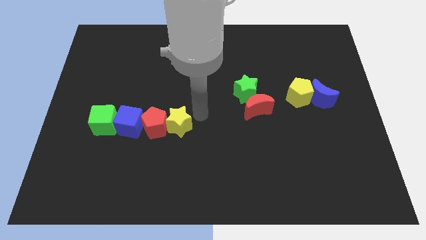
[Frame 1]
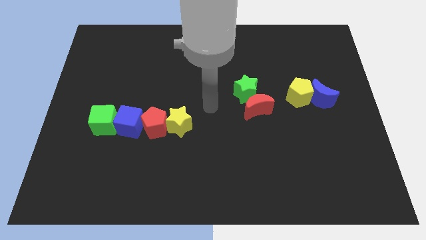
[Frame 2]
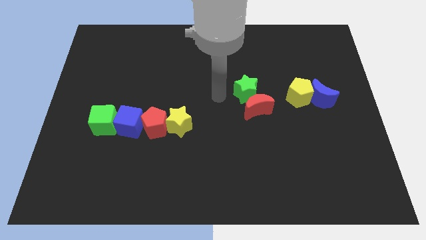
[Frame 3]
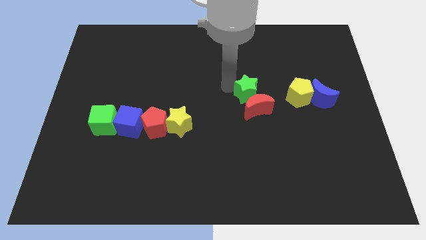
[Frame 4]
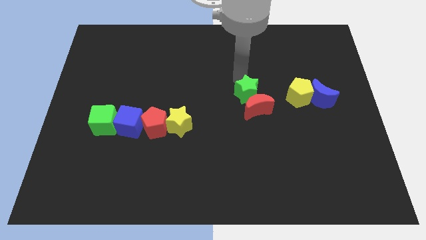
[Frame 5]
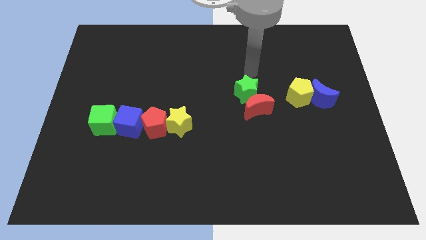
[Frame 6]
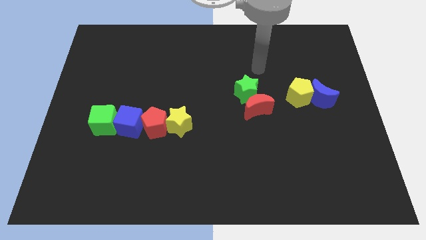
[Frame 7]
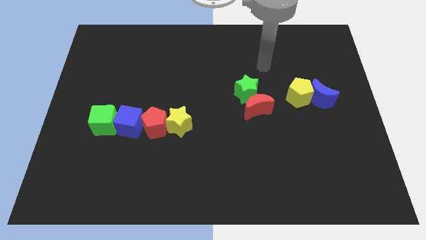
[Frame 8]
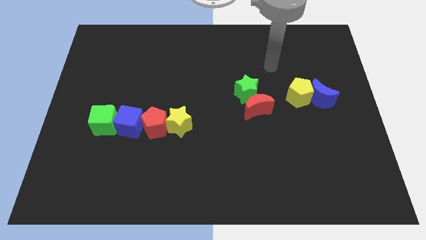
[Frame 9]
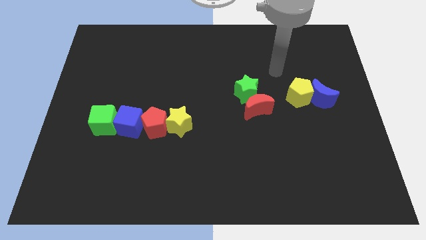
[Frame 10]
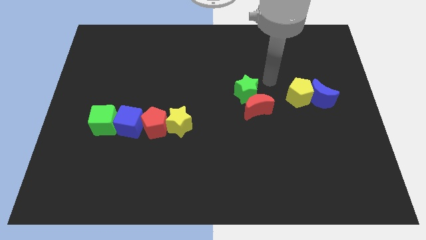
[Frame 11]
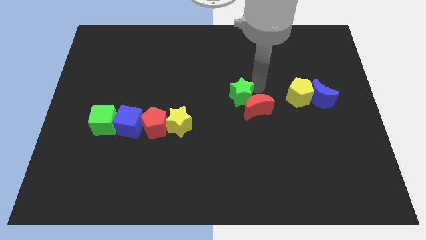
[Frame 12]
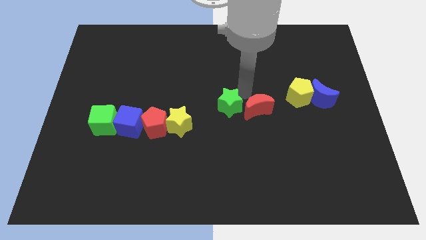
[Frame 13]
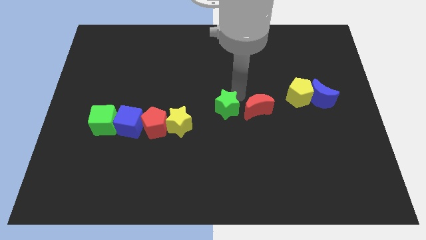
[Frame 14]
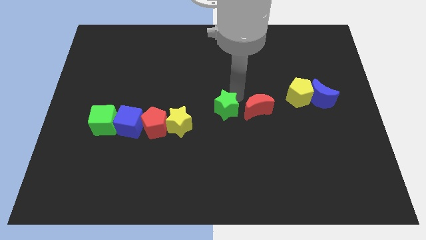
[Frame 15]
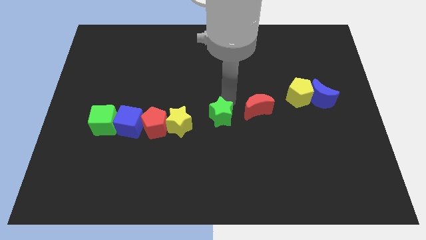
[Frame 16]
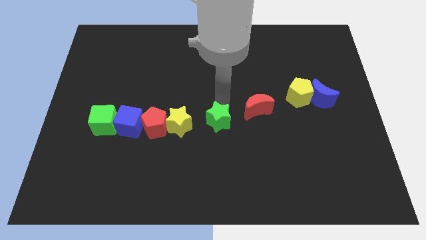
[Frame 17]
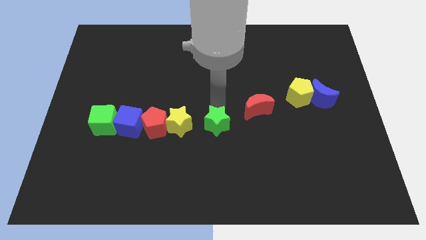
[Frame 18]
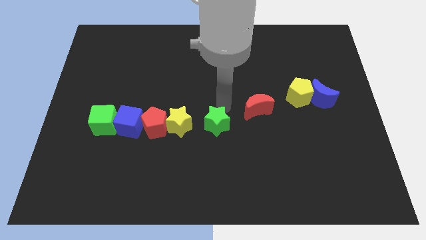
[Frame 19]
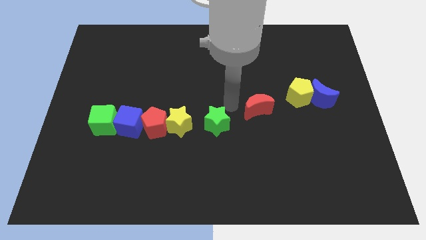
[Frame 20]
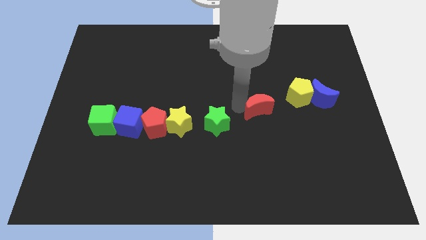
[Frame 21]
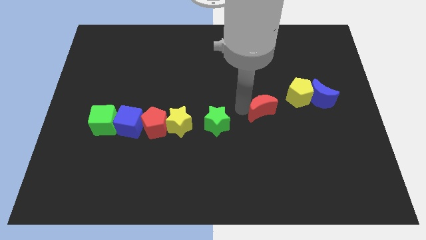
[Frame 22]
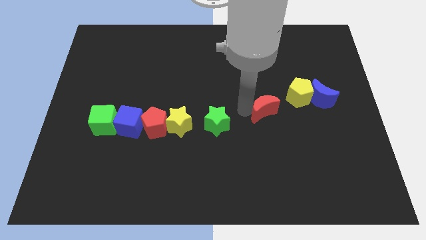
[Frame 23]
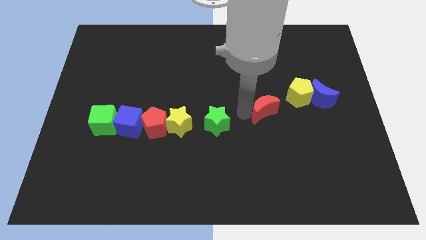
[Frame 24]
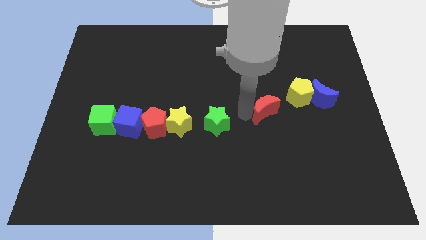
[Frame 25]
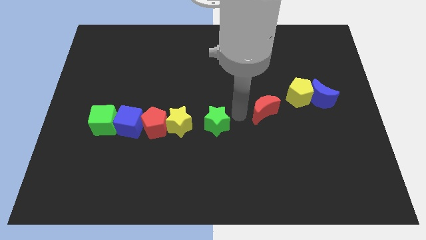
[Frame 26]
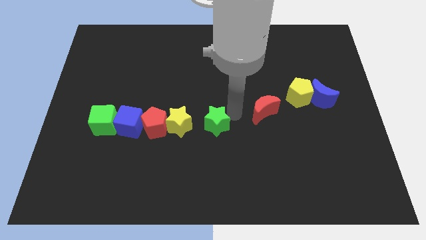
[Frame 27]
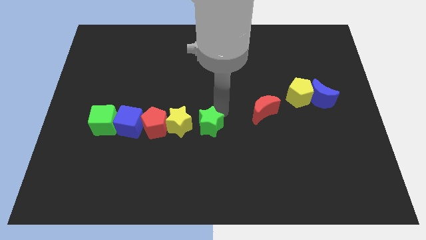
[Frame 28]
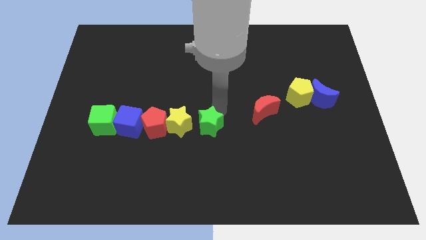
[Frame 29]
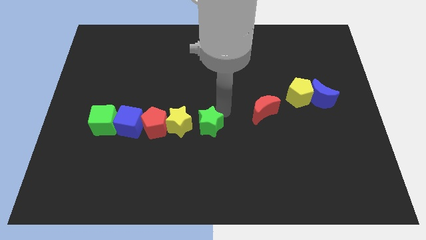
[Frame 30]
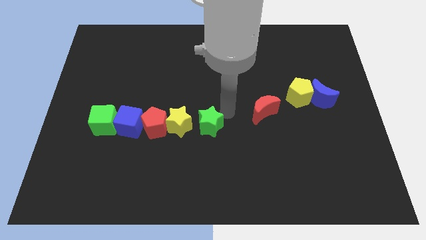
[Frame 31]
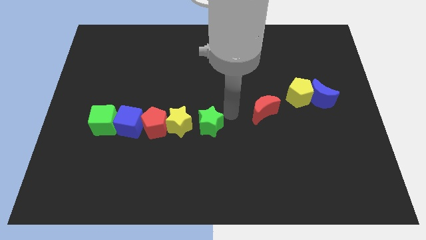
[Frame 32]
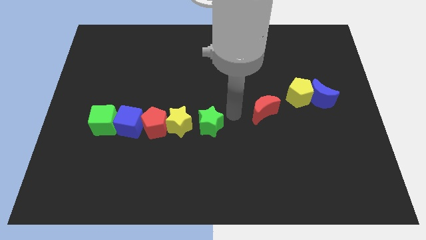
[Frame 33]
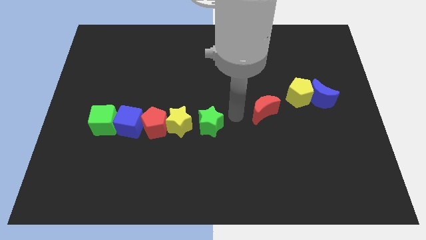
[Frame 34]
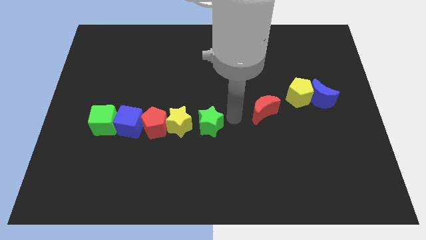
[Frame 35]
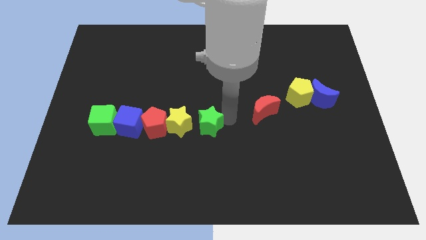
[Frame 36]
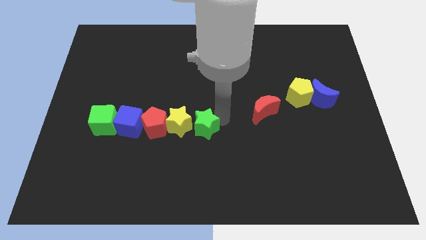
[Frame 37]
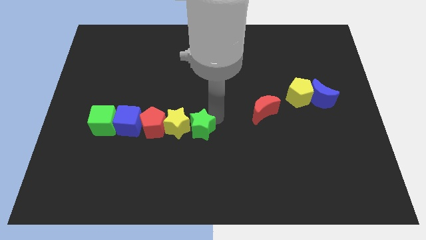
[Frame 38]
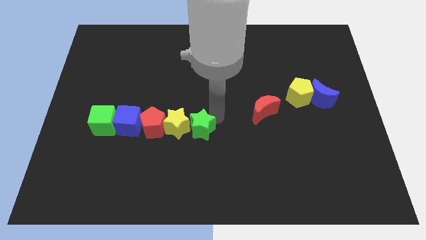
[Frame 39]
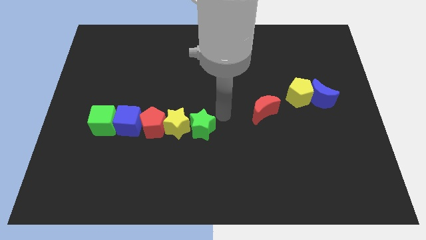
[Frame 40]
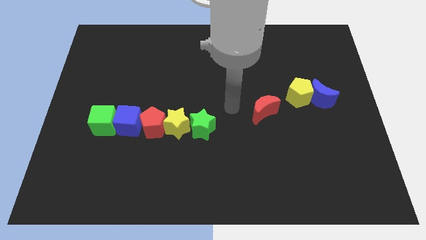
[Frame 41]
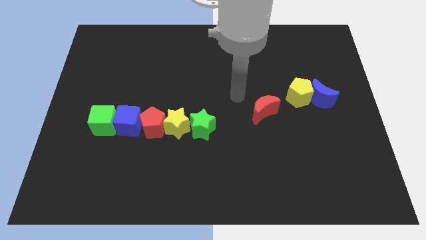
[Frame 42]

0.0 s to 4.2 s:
push the green star and red moon slightly to the bottom side of the board

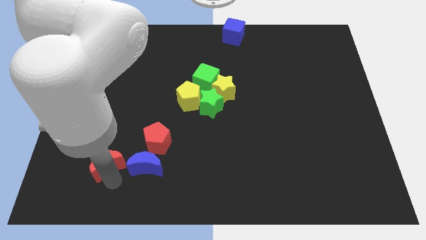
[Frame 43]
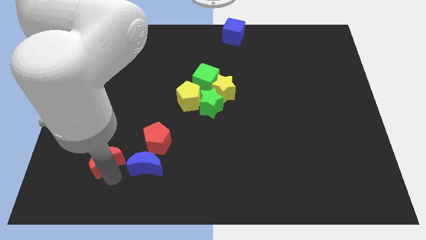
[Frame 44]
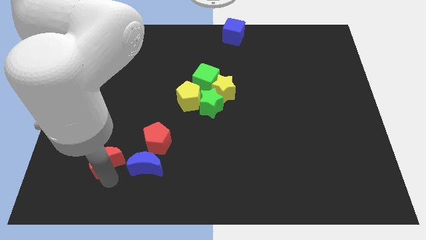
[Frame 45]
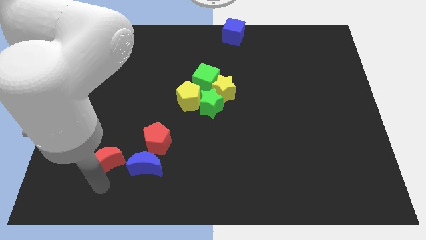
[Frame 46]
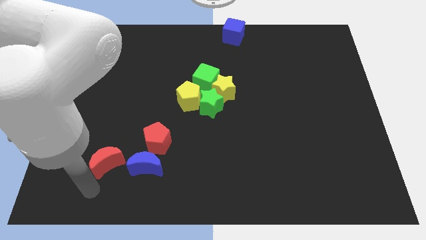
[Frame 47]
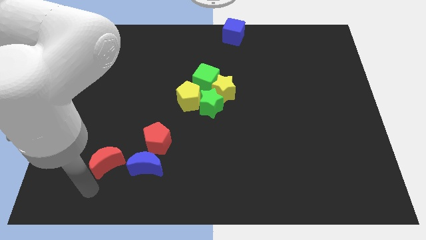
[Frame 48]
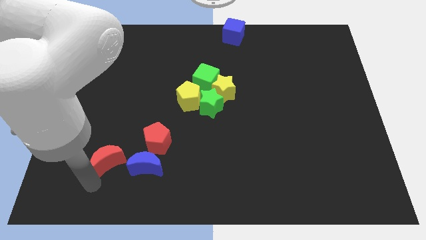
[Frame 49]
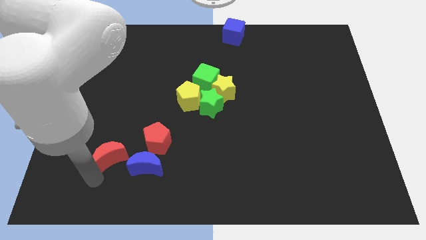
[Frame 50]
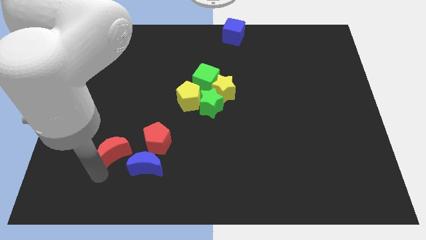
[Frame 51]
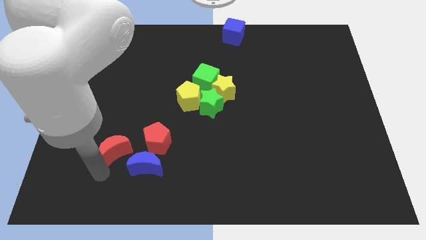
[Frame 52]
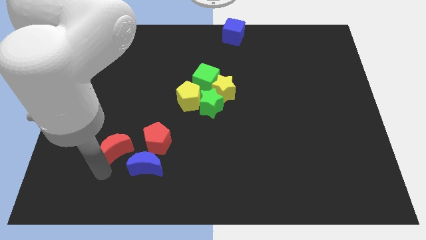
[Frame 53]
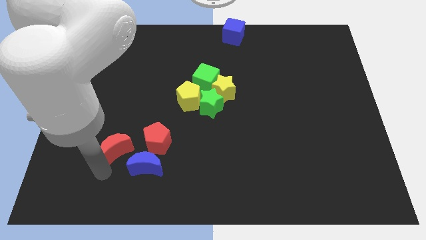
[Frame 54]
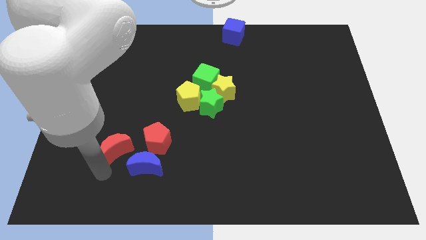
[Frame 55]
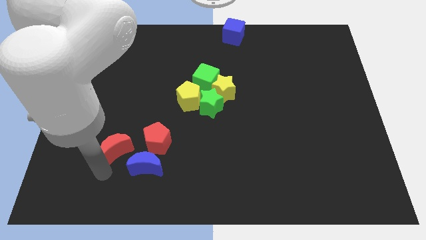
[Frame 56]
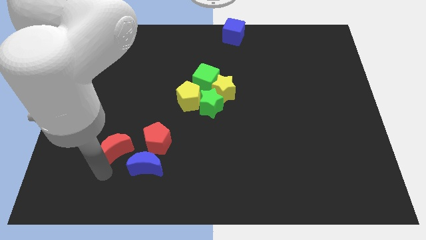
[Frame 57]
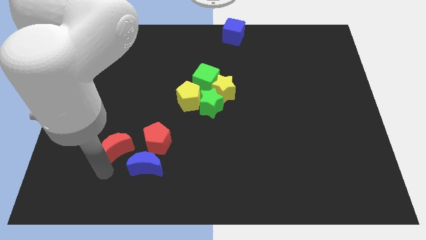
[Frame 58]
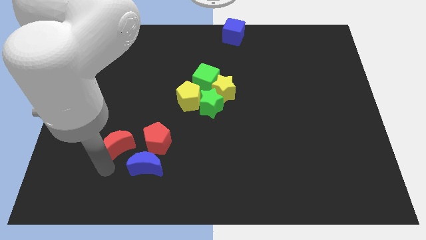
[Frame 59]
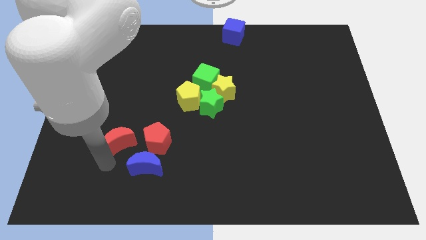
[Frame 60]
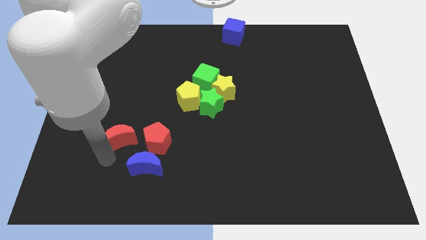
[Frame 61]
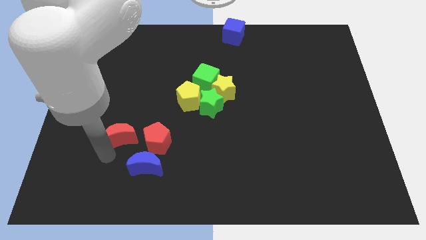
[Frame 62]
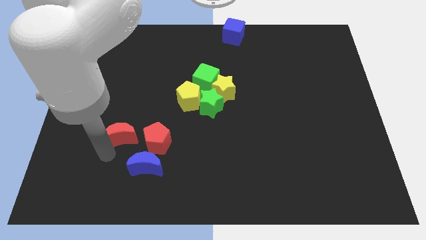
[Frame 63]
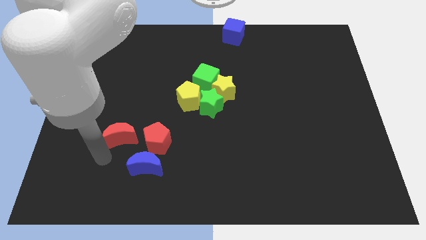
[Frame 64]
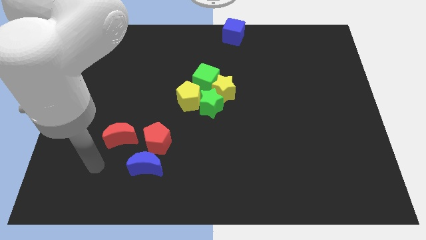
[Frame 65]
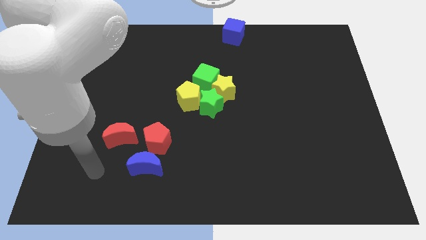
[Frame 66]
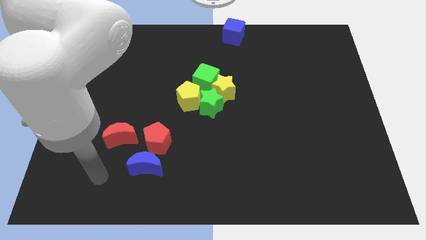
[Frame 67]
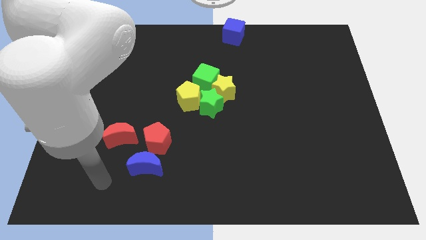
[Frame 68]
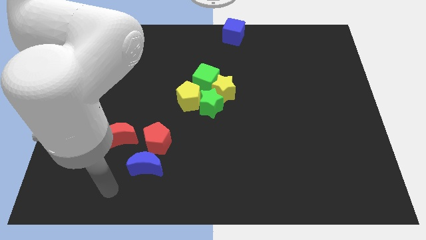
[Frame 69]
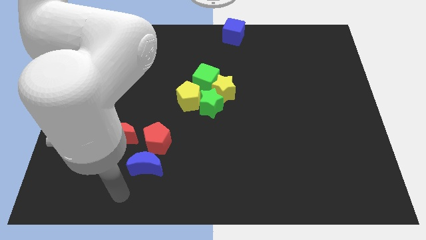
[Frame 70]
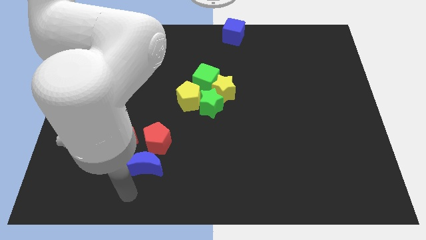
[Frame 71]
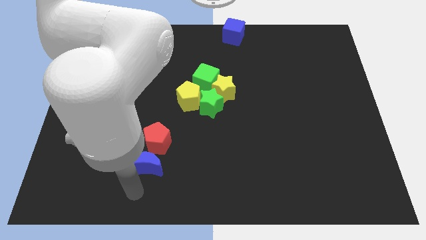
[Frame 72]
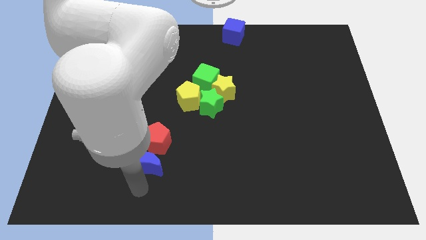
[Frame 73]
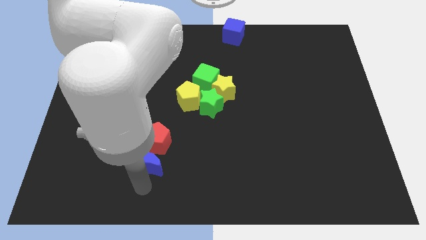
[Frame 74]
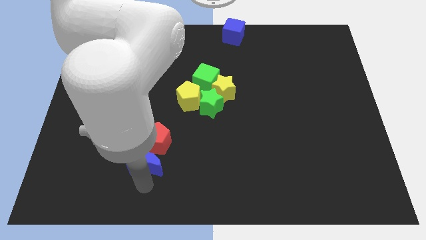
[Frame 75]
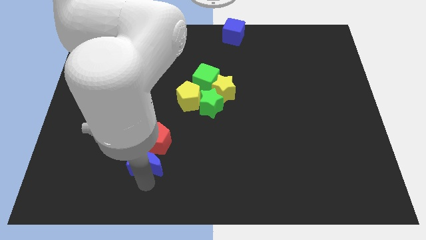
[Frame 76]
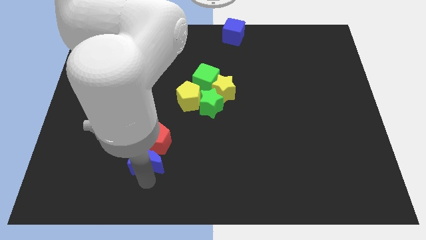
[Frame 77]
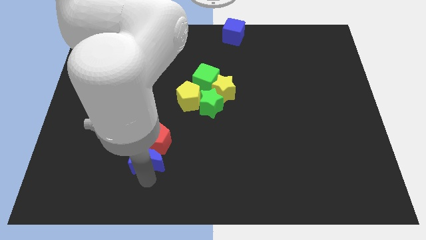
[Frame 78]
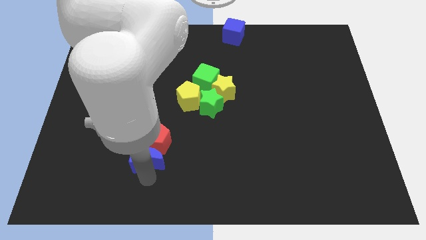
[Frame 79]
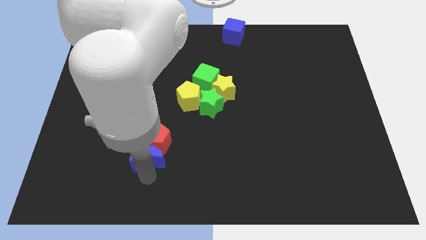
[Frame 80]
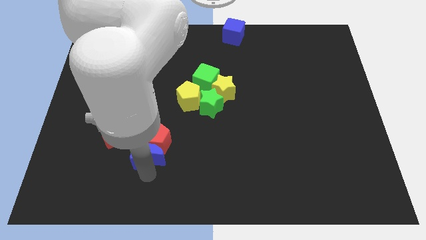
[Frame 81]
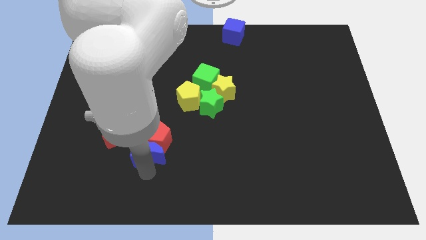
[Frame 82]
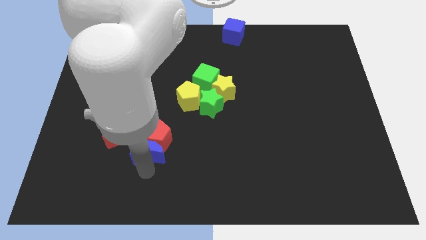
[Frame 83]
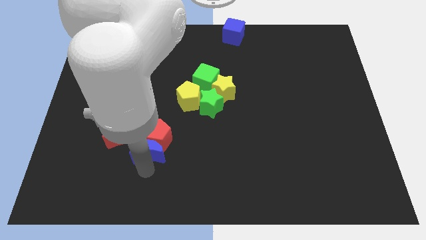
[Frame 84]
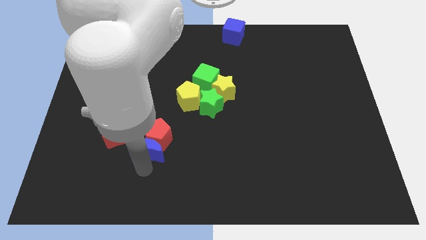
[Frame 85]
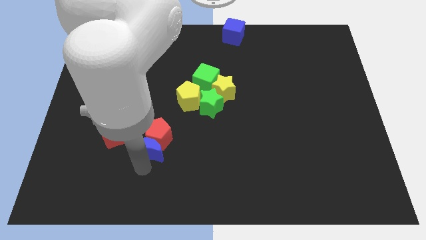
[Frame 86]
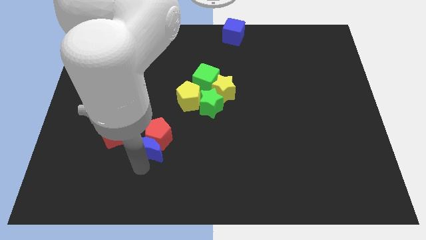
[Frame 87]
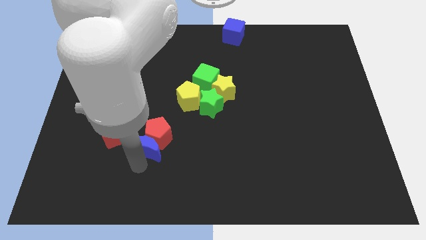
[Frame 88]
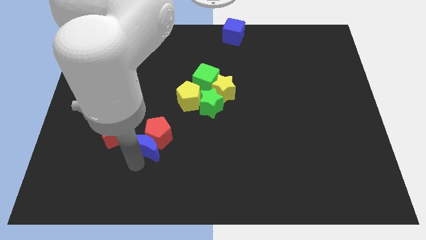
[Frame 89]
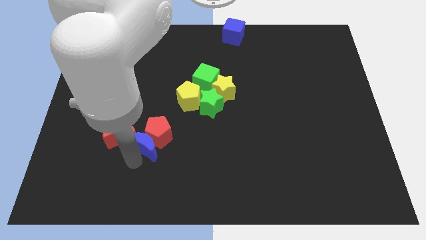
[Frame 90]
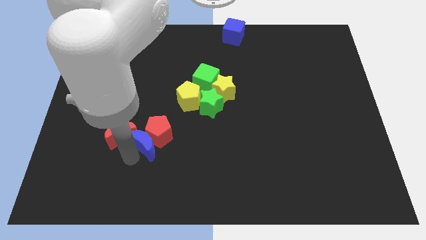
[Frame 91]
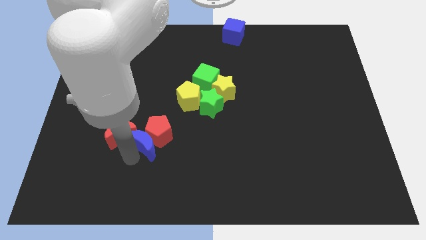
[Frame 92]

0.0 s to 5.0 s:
push blue moon into red pentagon
